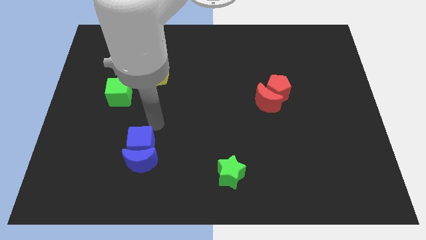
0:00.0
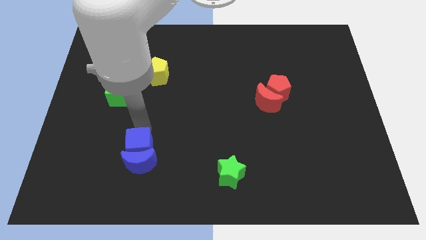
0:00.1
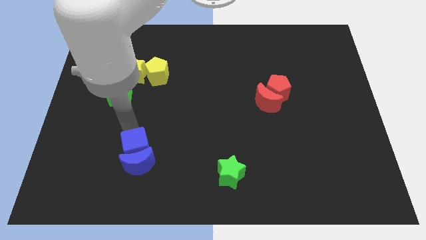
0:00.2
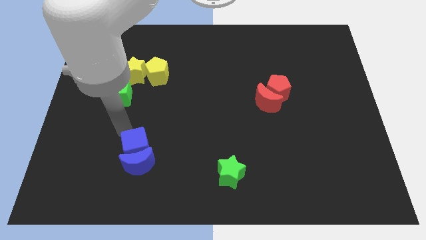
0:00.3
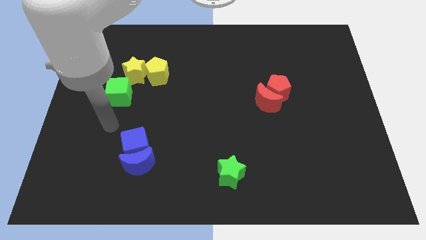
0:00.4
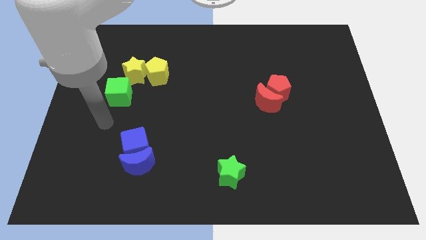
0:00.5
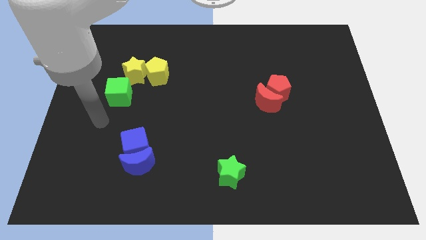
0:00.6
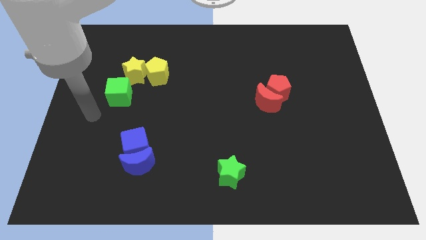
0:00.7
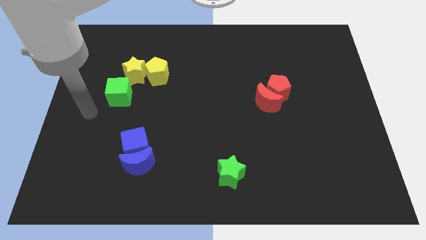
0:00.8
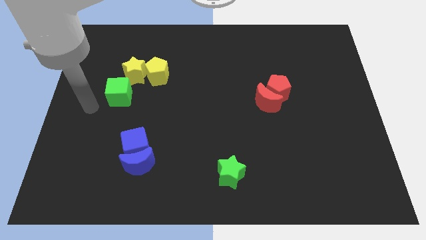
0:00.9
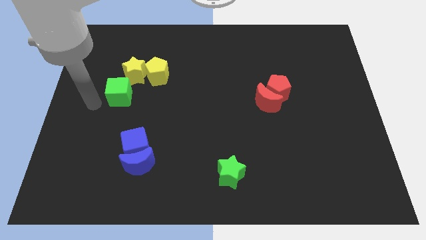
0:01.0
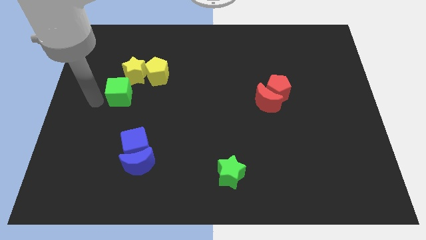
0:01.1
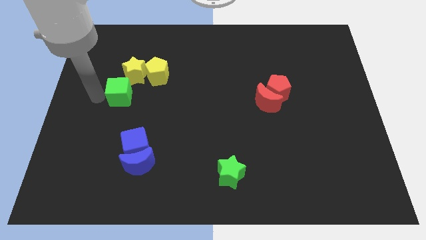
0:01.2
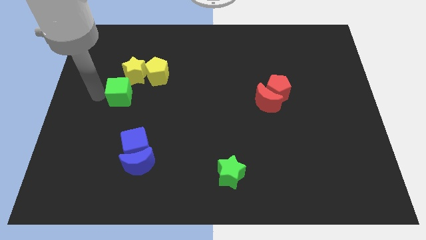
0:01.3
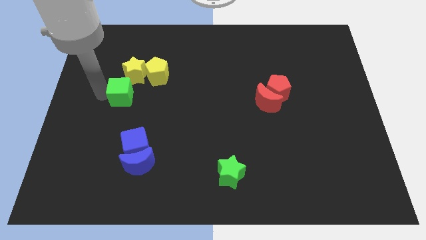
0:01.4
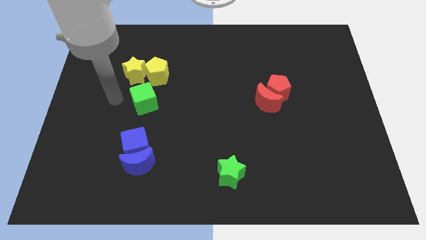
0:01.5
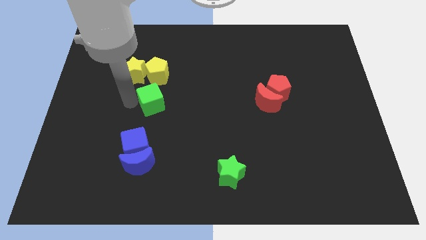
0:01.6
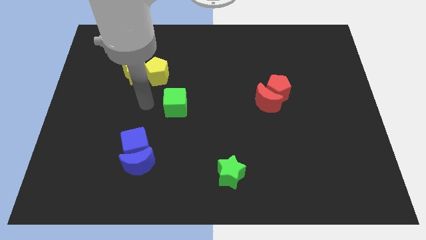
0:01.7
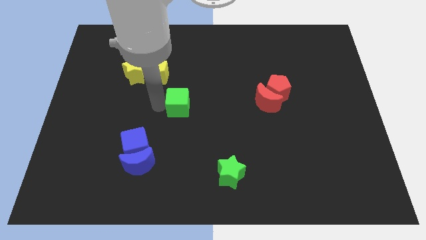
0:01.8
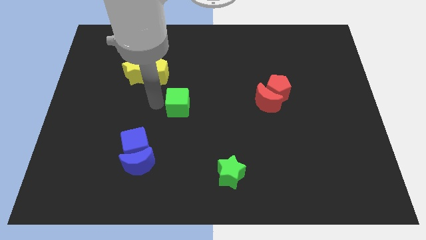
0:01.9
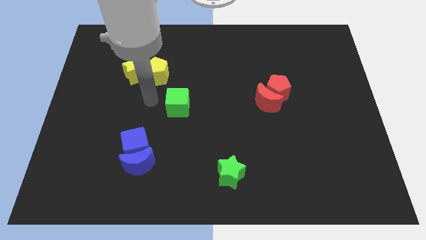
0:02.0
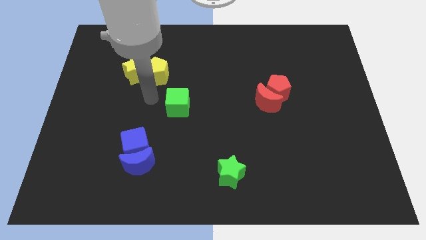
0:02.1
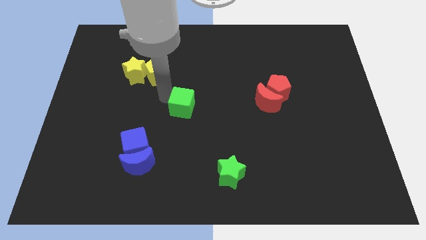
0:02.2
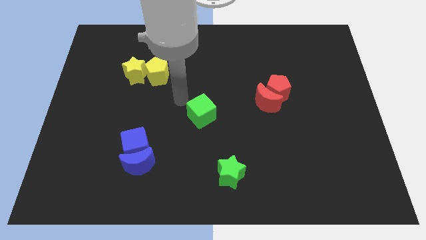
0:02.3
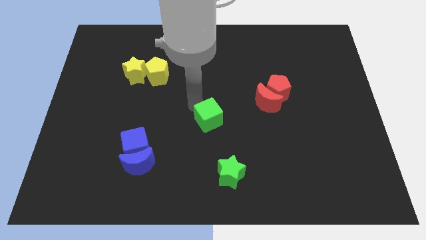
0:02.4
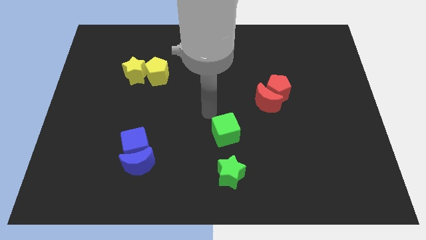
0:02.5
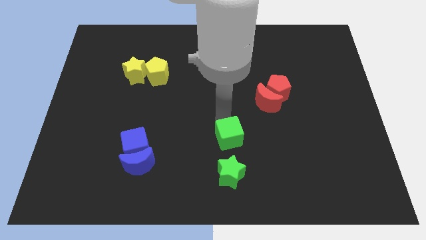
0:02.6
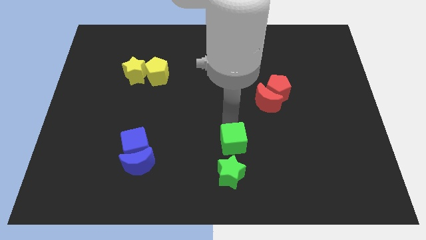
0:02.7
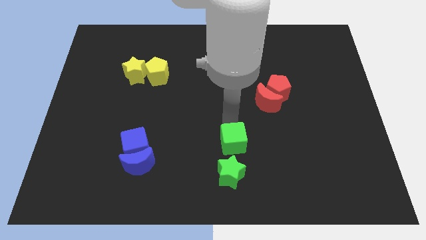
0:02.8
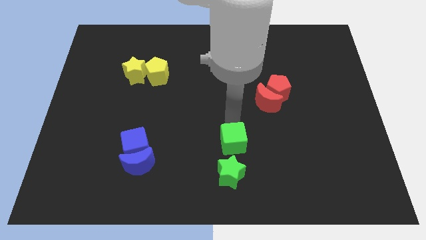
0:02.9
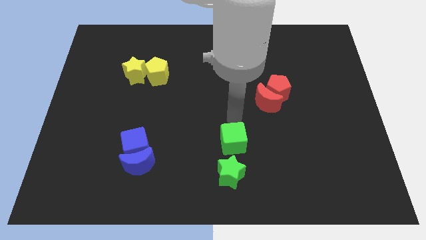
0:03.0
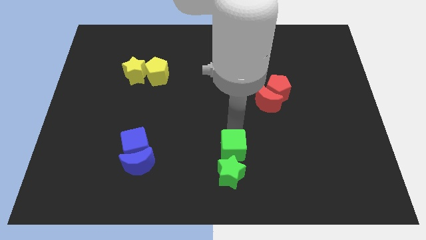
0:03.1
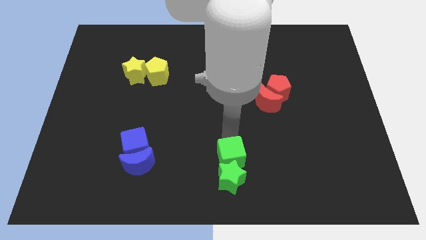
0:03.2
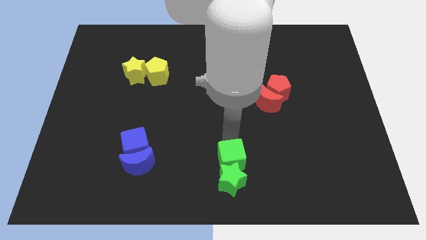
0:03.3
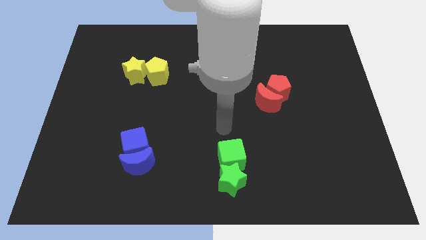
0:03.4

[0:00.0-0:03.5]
push the green cube towards the top of the green star

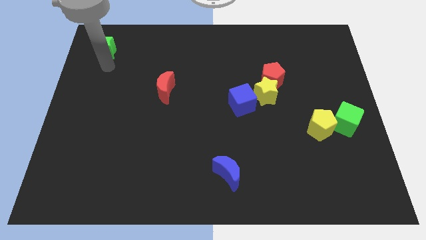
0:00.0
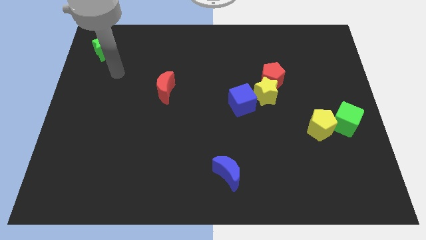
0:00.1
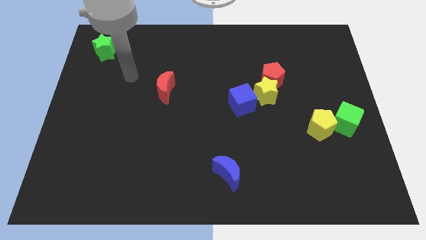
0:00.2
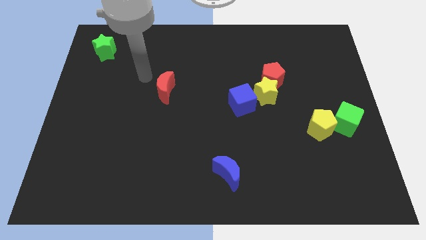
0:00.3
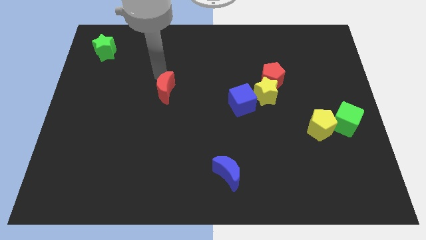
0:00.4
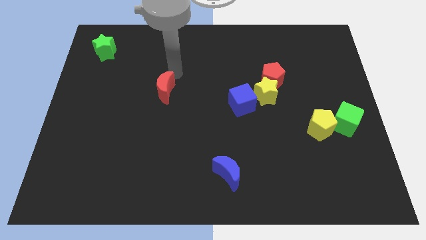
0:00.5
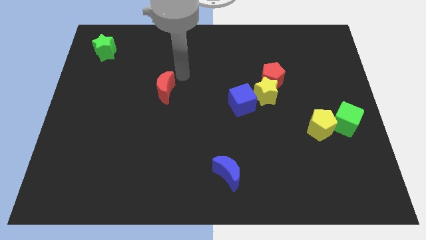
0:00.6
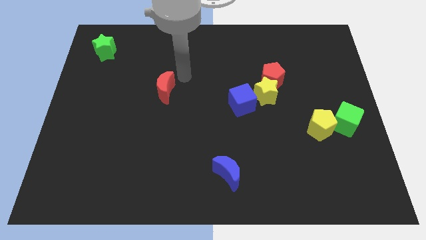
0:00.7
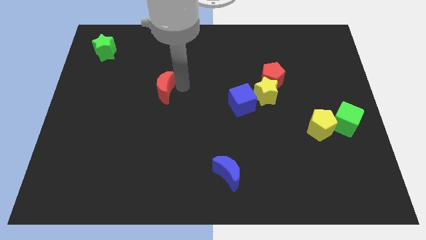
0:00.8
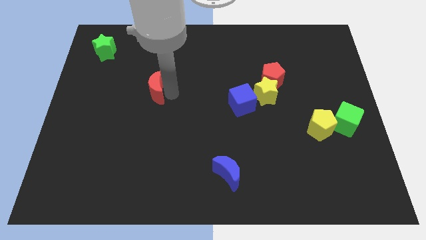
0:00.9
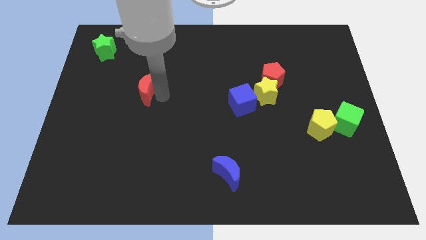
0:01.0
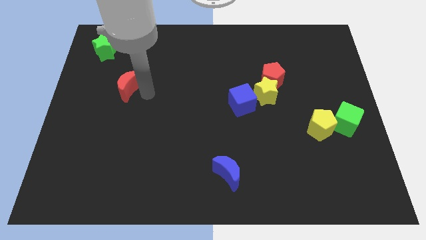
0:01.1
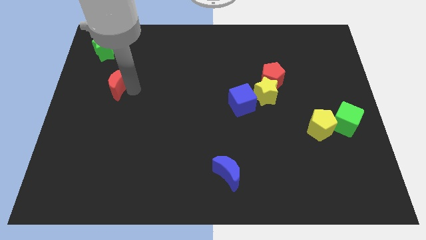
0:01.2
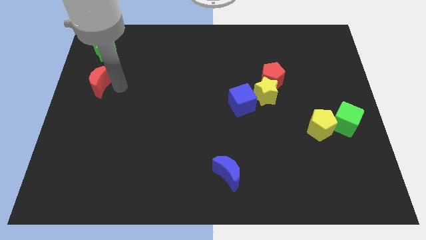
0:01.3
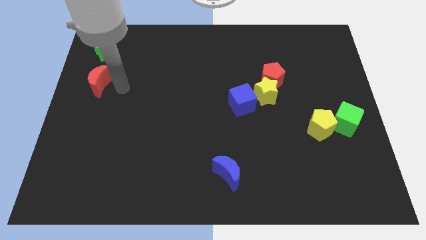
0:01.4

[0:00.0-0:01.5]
place the red crescent below the green star

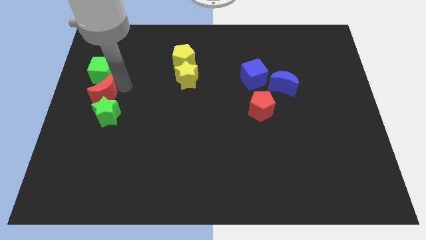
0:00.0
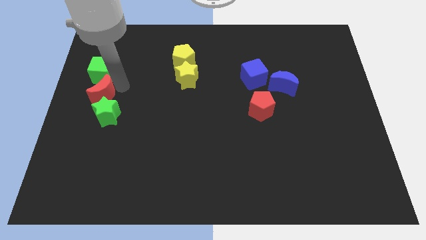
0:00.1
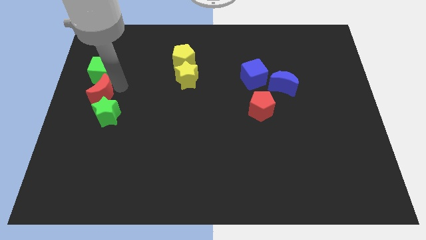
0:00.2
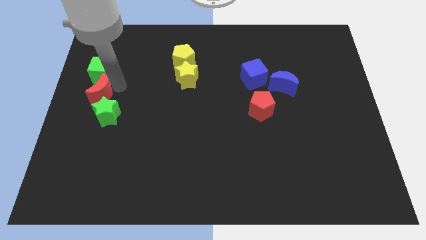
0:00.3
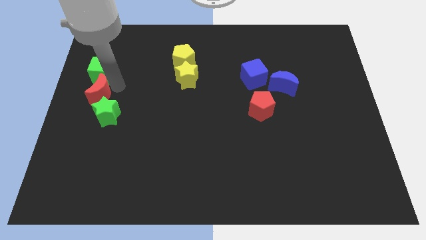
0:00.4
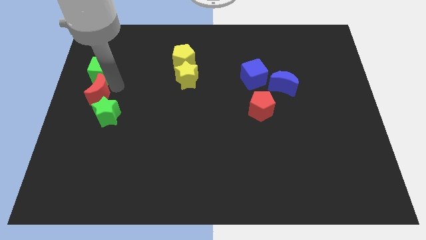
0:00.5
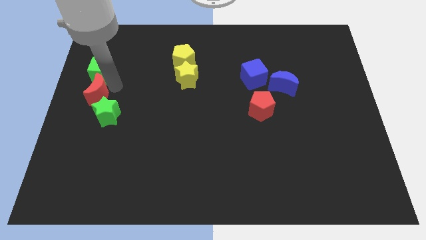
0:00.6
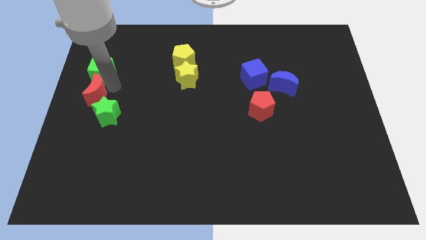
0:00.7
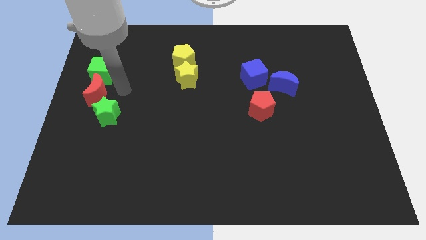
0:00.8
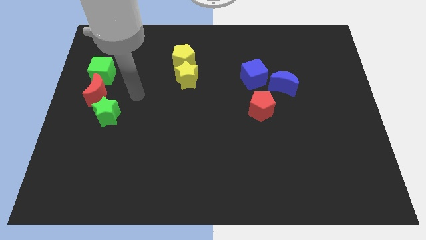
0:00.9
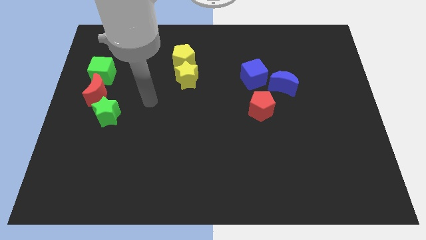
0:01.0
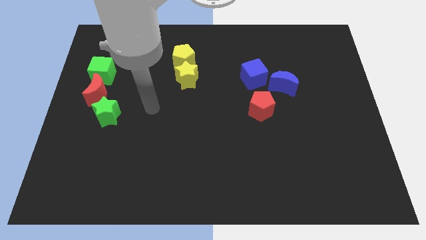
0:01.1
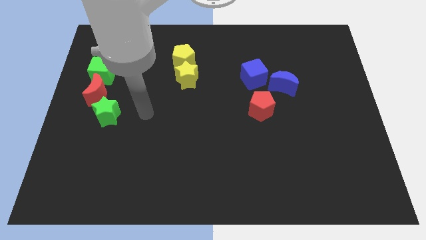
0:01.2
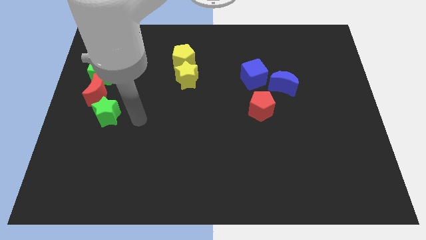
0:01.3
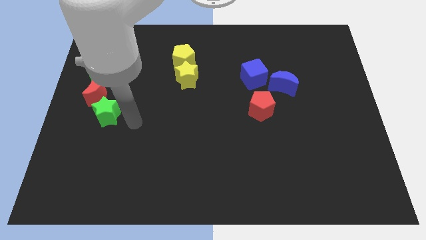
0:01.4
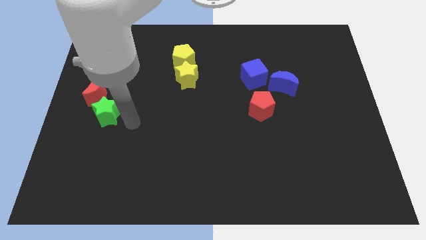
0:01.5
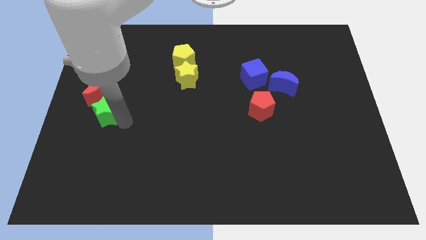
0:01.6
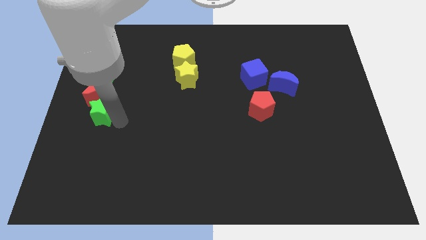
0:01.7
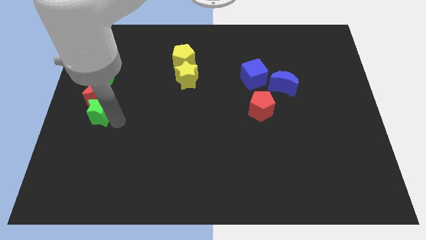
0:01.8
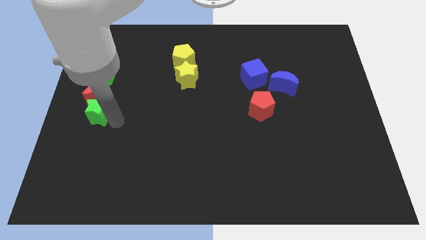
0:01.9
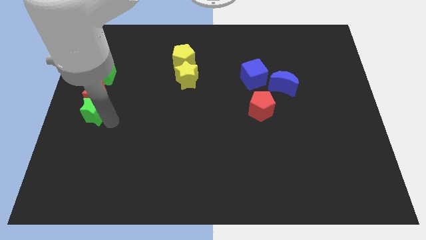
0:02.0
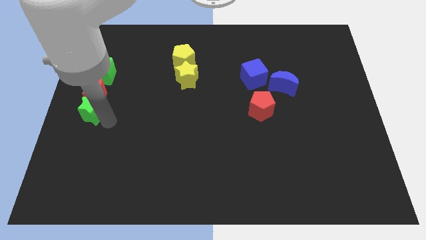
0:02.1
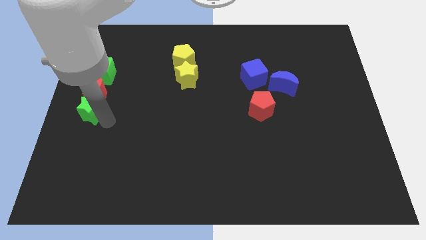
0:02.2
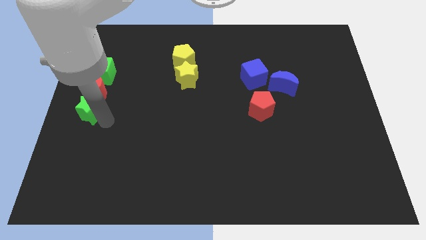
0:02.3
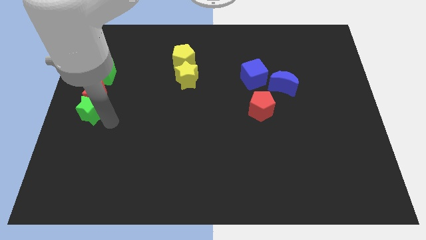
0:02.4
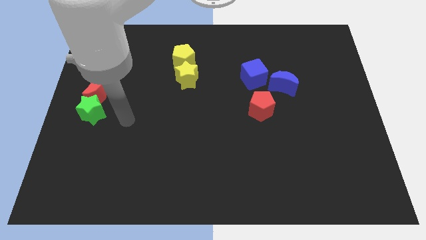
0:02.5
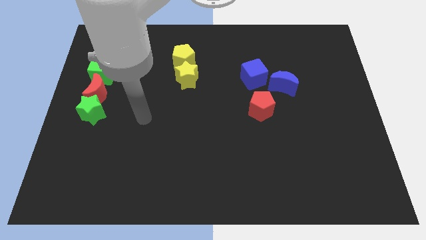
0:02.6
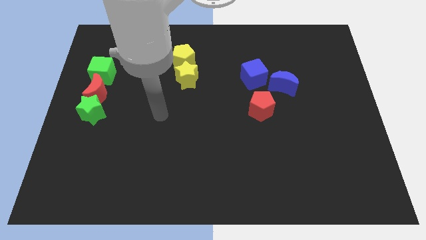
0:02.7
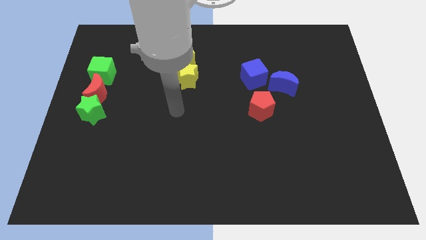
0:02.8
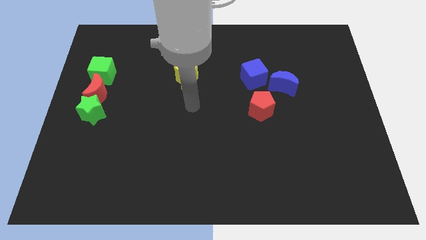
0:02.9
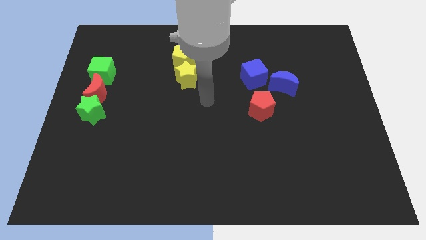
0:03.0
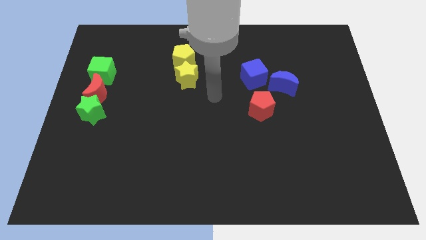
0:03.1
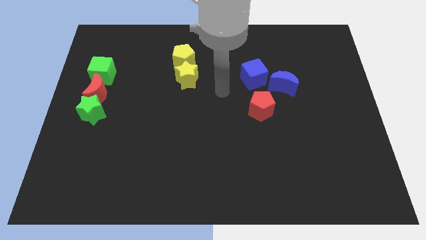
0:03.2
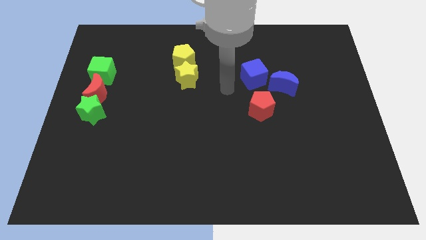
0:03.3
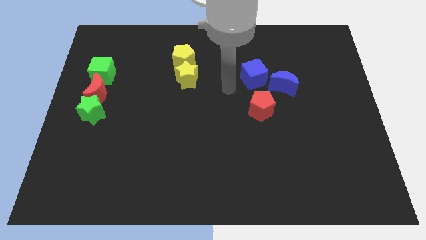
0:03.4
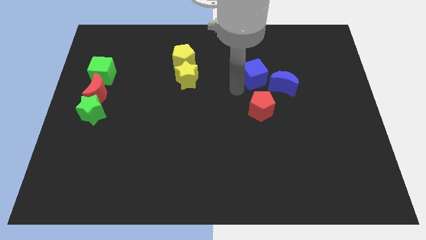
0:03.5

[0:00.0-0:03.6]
point your arm left to blue cube

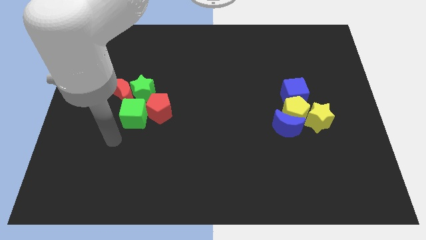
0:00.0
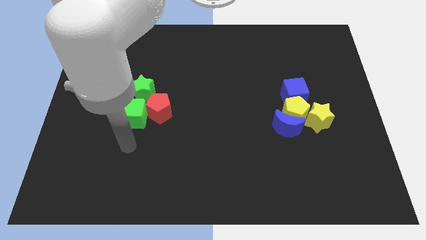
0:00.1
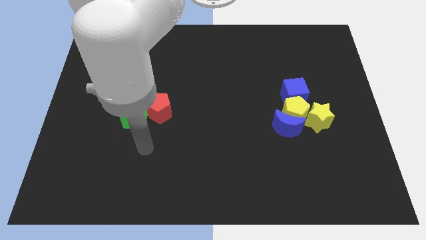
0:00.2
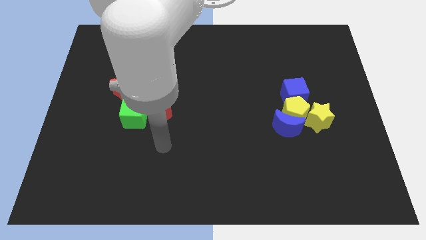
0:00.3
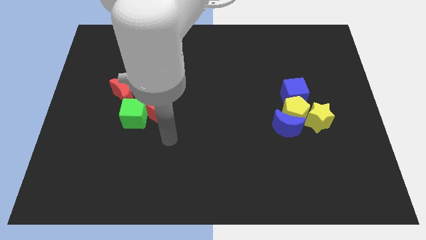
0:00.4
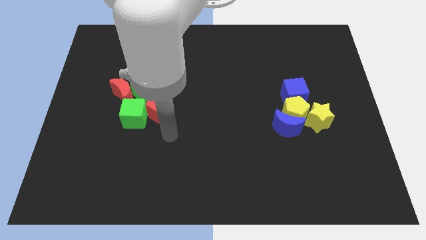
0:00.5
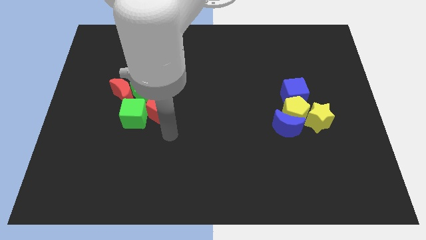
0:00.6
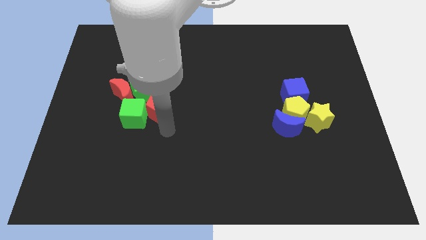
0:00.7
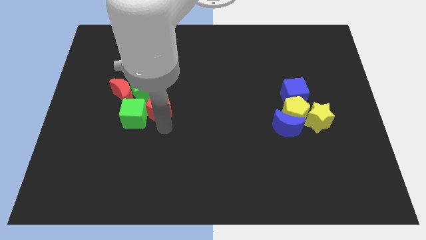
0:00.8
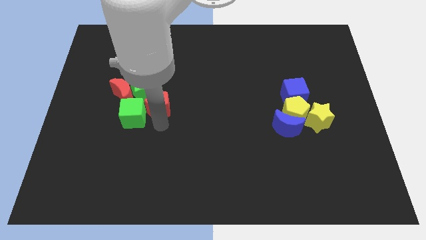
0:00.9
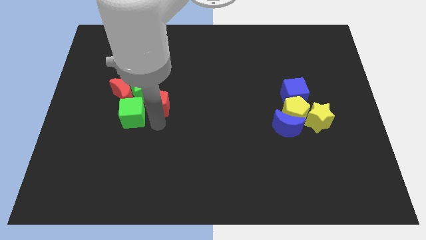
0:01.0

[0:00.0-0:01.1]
point your arm below red pentagon
